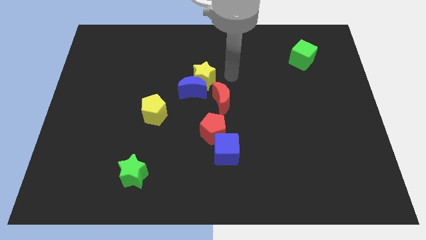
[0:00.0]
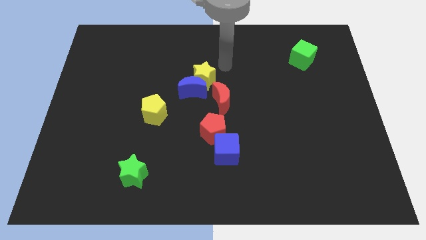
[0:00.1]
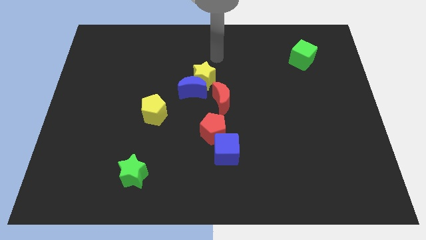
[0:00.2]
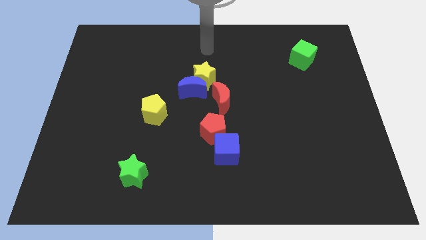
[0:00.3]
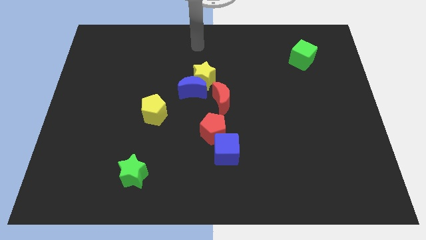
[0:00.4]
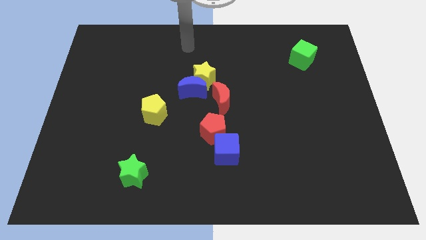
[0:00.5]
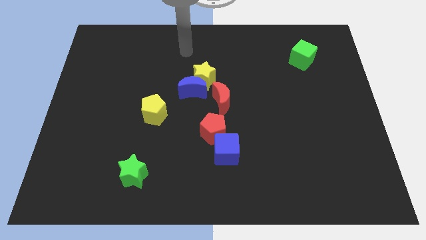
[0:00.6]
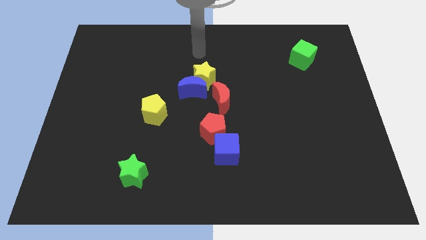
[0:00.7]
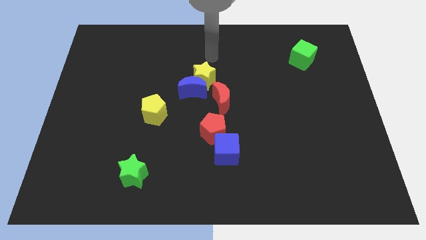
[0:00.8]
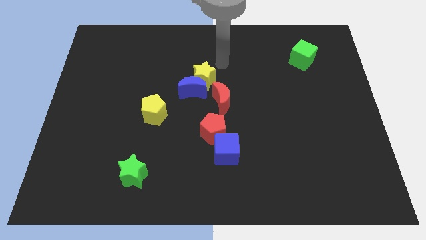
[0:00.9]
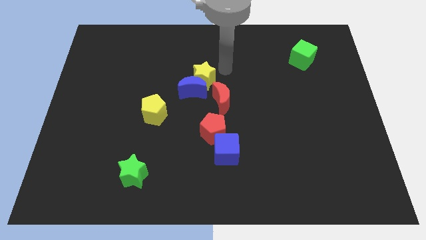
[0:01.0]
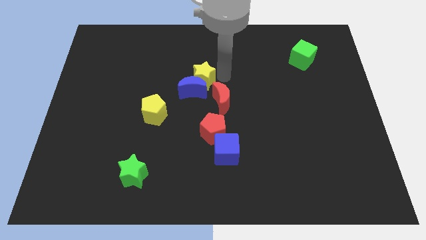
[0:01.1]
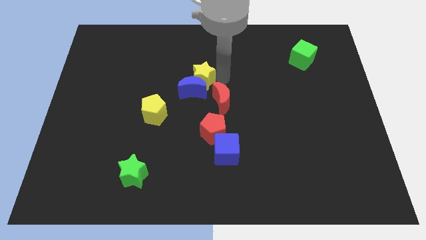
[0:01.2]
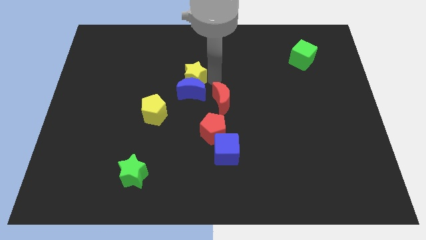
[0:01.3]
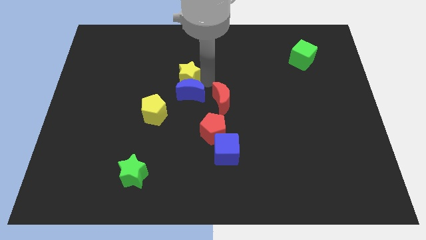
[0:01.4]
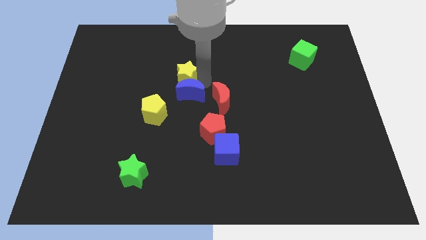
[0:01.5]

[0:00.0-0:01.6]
move your arm to the top of blue crescent

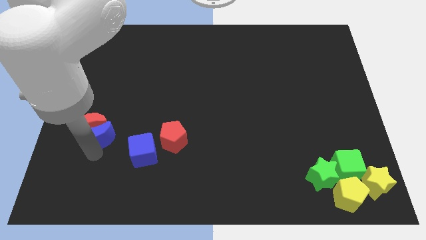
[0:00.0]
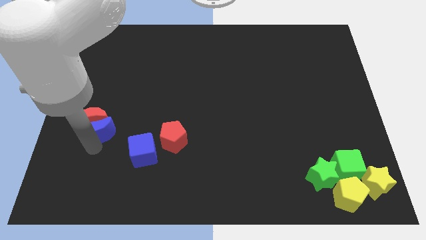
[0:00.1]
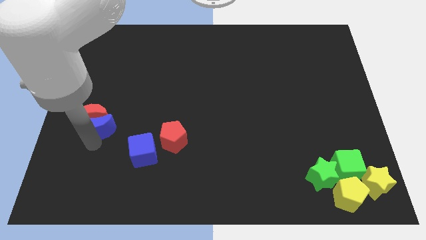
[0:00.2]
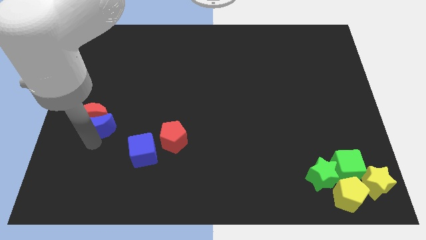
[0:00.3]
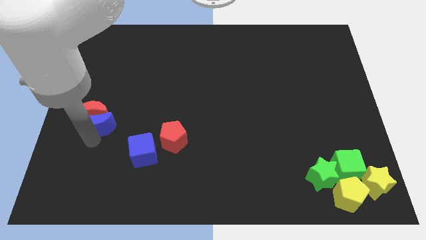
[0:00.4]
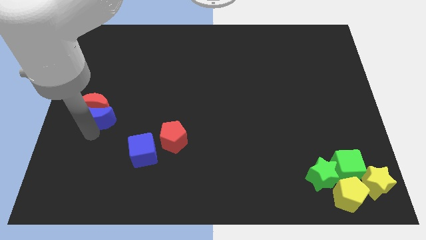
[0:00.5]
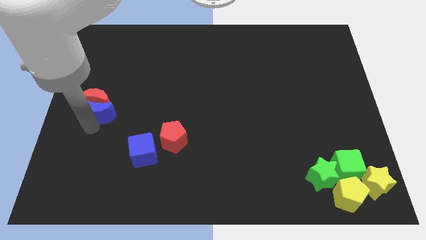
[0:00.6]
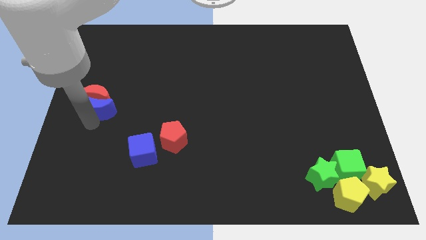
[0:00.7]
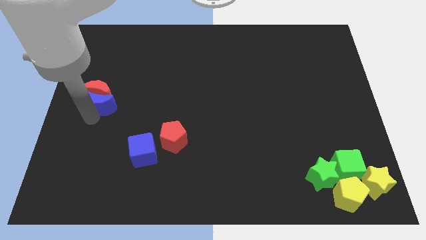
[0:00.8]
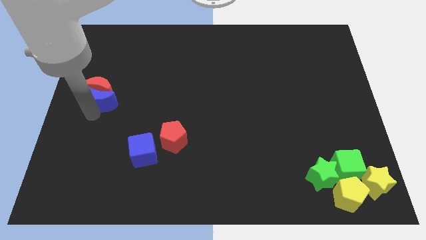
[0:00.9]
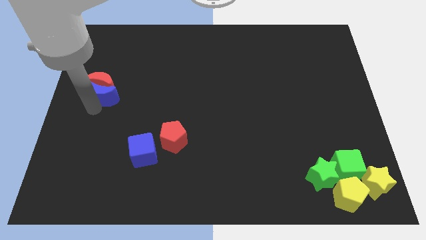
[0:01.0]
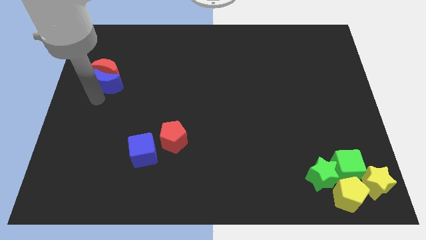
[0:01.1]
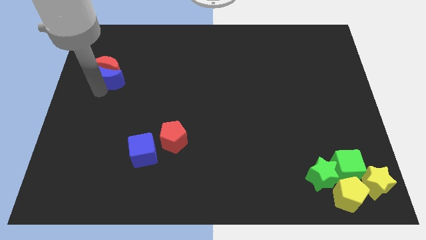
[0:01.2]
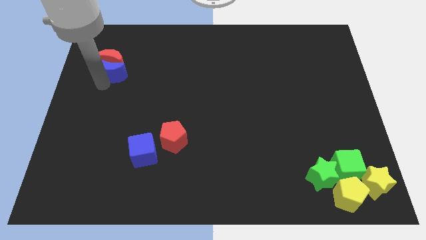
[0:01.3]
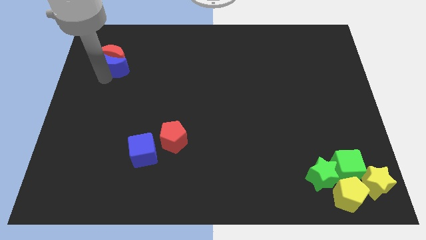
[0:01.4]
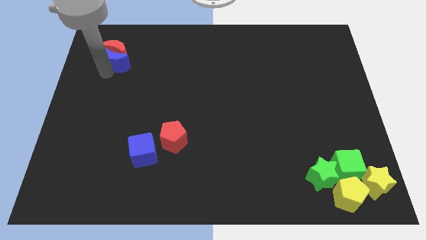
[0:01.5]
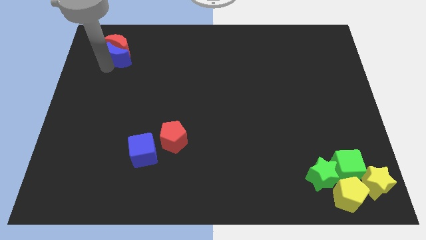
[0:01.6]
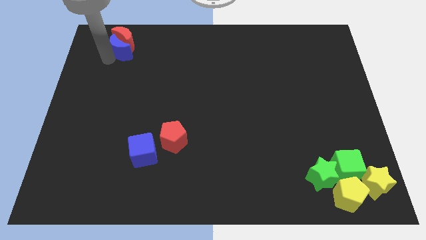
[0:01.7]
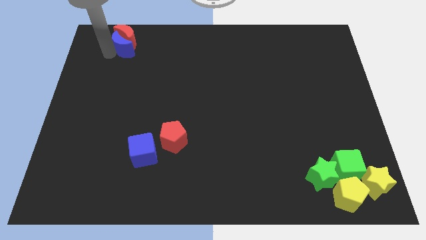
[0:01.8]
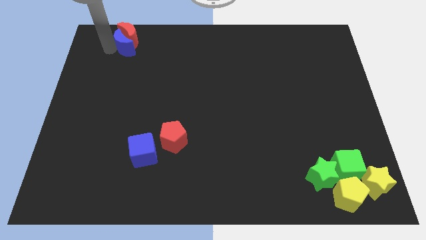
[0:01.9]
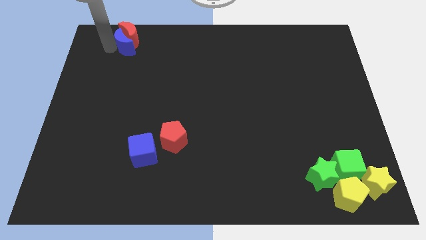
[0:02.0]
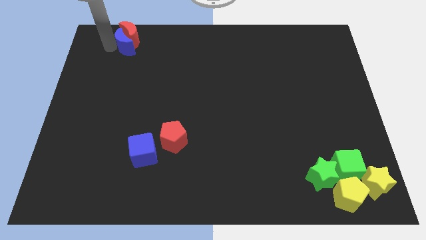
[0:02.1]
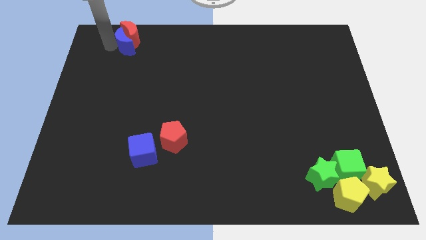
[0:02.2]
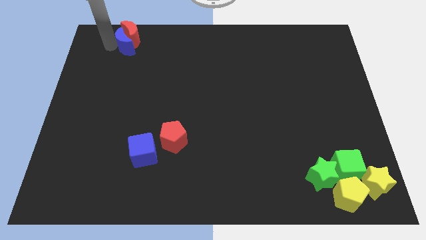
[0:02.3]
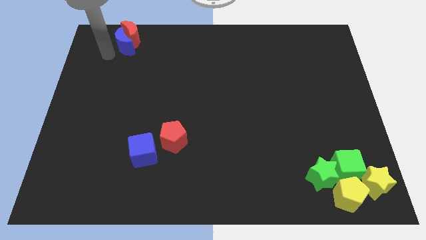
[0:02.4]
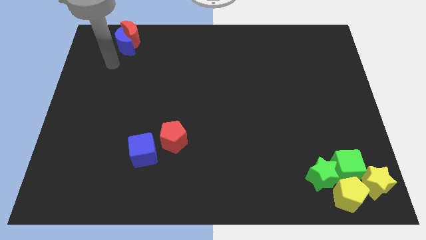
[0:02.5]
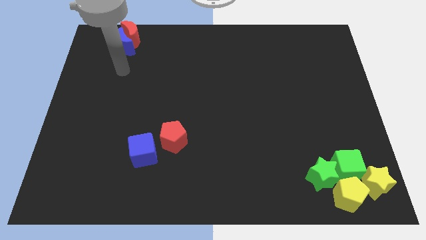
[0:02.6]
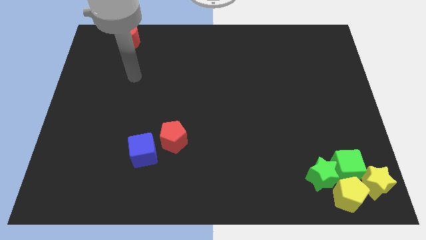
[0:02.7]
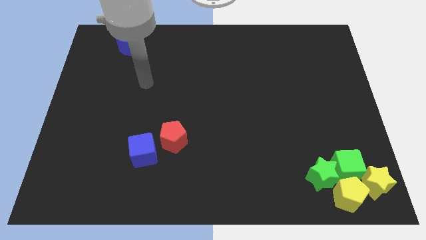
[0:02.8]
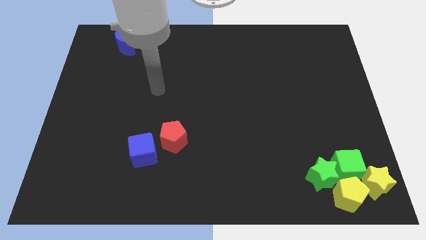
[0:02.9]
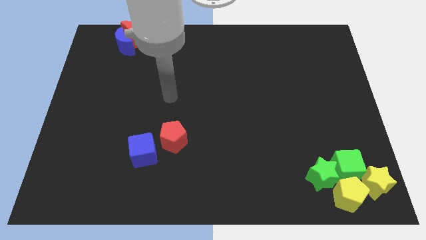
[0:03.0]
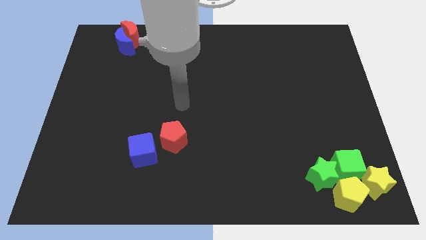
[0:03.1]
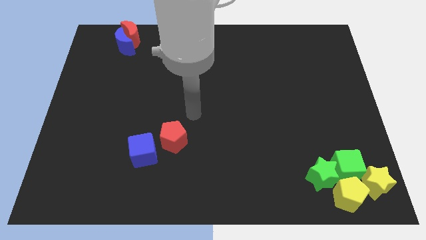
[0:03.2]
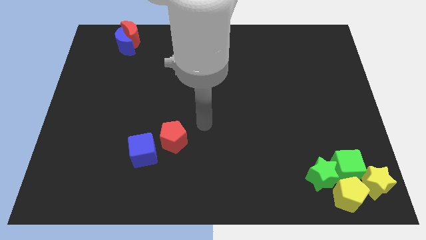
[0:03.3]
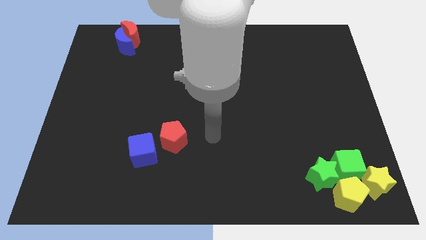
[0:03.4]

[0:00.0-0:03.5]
push blue crescent towards up

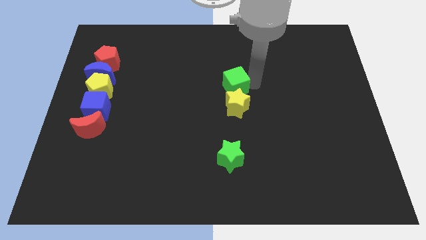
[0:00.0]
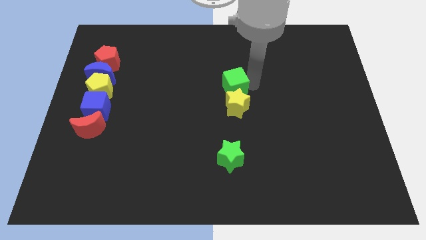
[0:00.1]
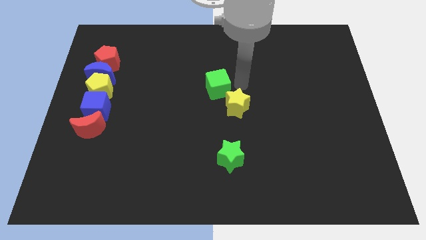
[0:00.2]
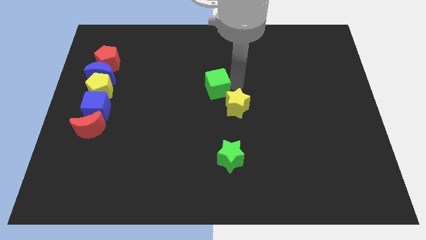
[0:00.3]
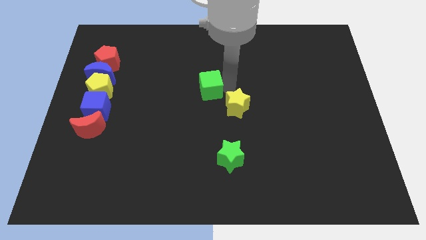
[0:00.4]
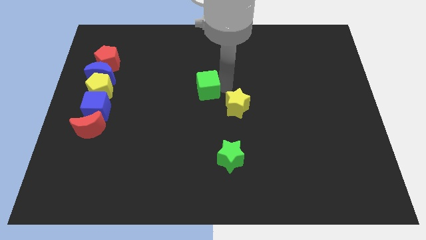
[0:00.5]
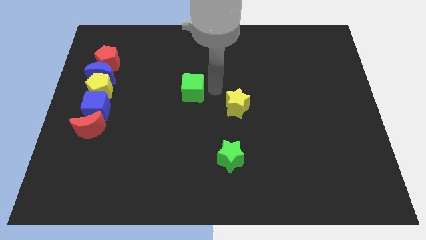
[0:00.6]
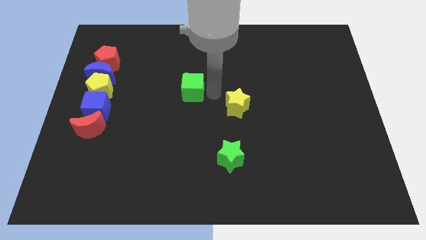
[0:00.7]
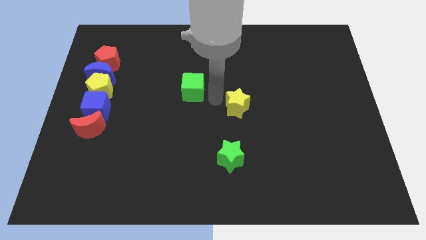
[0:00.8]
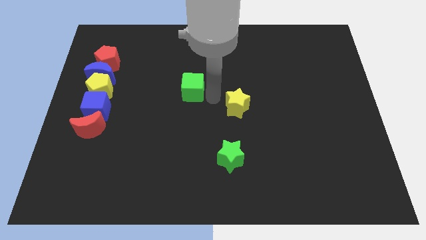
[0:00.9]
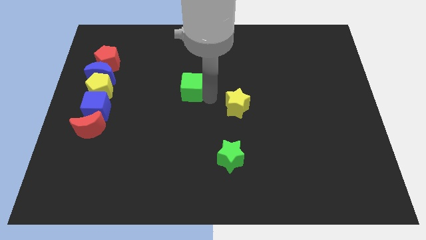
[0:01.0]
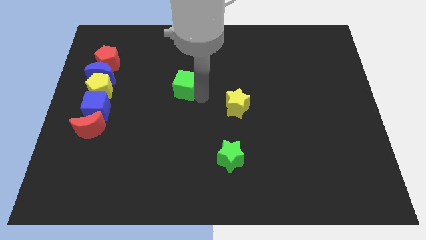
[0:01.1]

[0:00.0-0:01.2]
separate the green cube from the yellow star

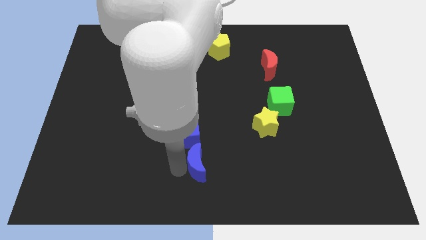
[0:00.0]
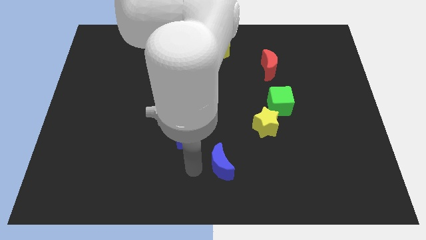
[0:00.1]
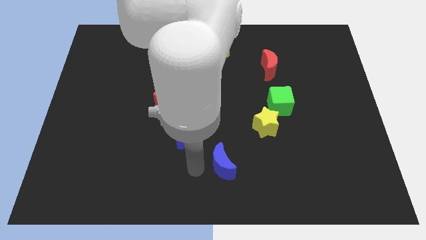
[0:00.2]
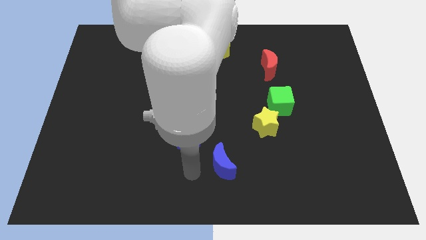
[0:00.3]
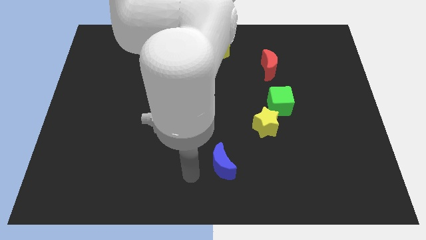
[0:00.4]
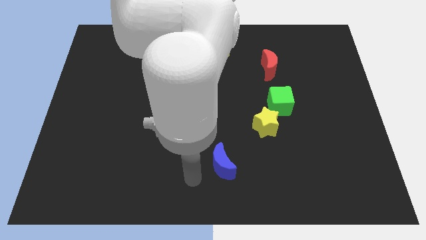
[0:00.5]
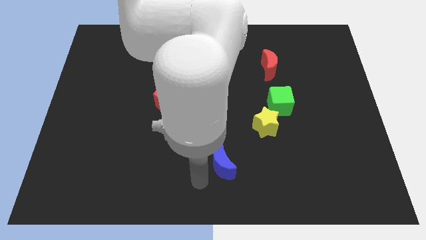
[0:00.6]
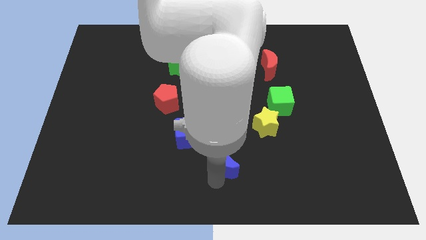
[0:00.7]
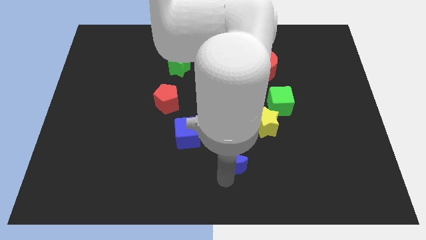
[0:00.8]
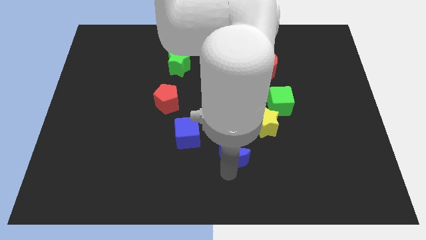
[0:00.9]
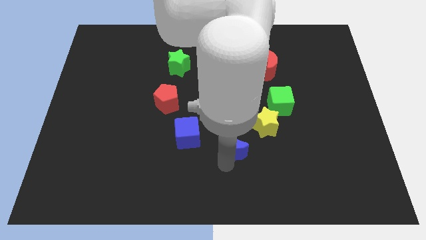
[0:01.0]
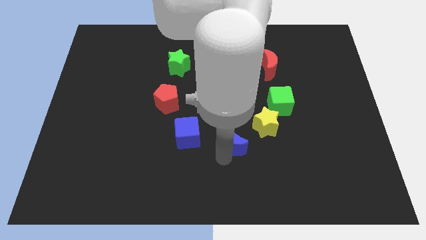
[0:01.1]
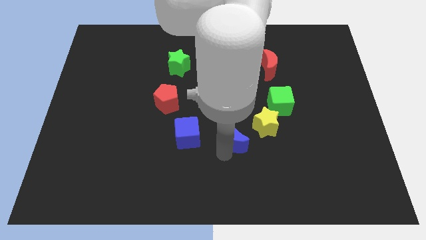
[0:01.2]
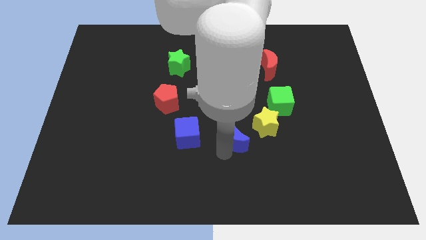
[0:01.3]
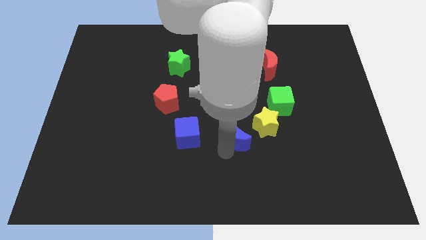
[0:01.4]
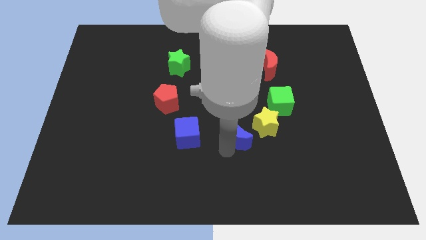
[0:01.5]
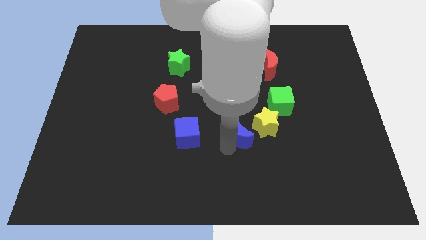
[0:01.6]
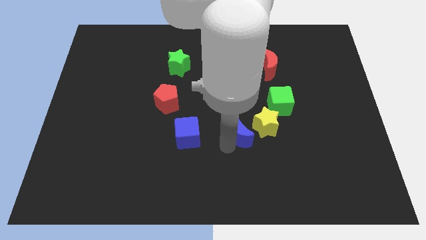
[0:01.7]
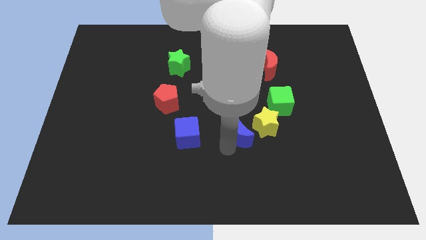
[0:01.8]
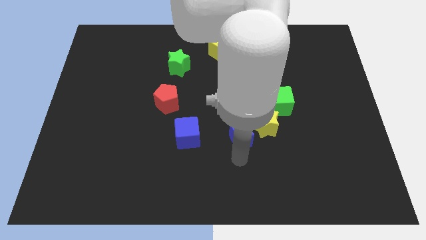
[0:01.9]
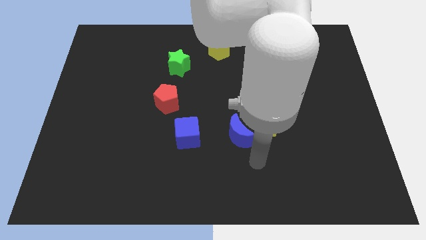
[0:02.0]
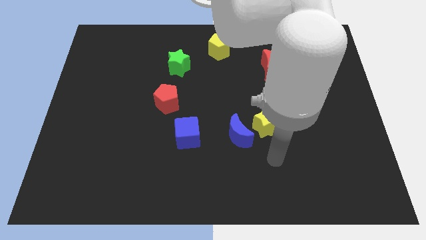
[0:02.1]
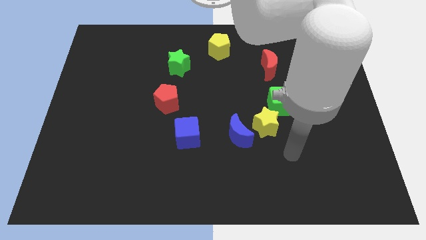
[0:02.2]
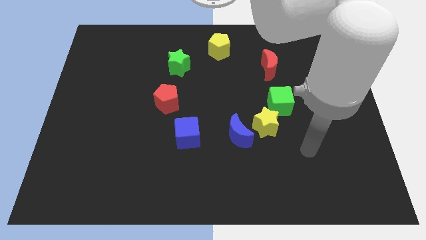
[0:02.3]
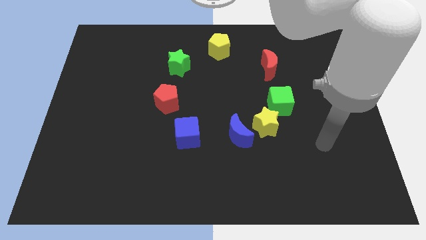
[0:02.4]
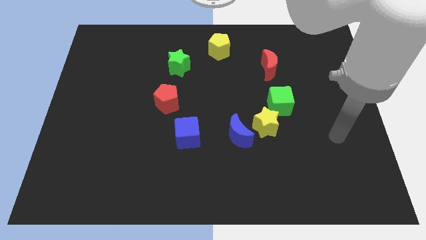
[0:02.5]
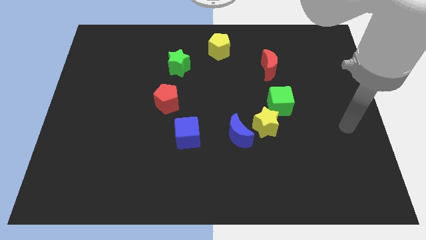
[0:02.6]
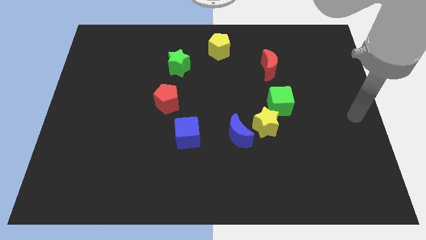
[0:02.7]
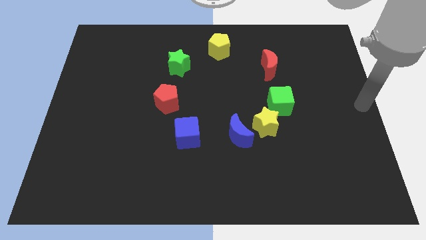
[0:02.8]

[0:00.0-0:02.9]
move the blue moon left to the yellow star
